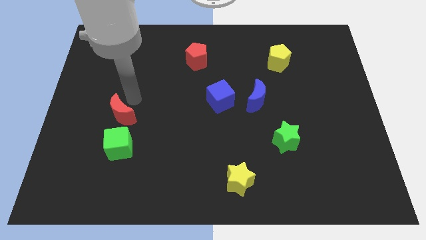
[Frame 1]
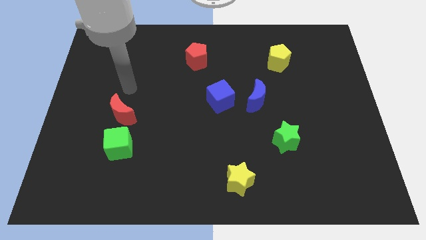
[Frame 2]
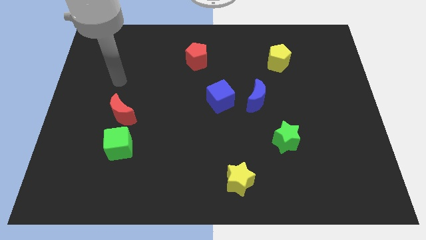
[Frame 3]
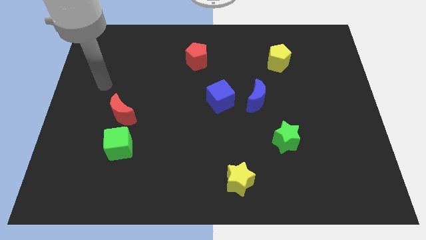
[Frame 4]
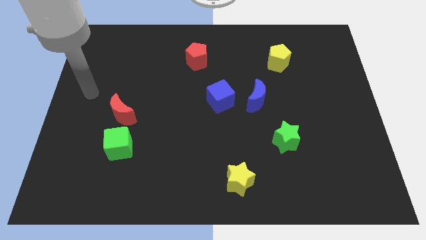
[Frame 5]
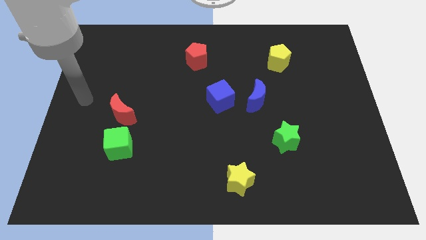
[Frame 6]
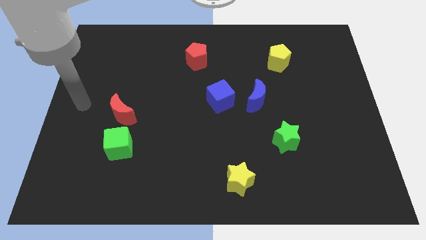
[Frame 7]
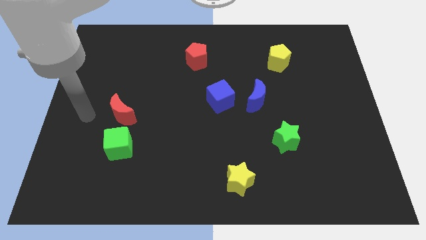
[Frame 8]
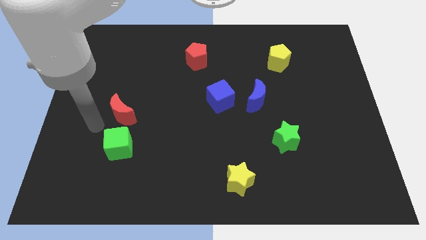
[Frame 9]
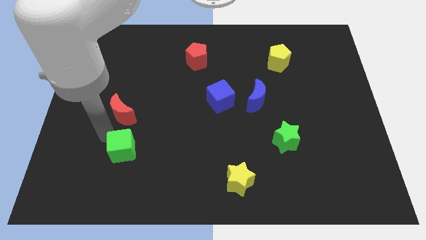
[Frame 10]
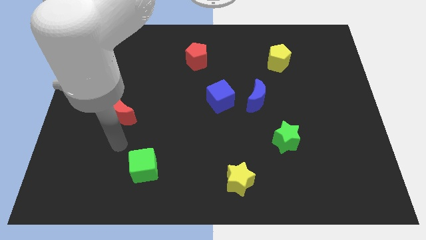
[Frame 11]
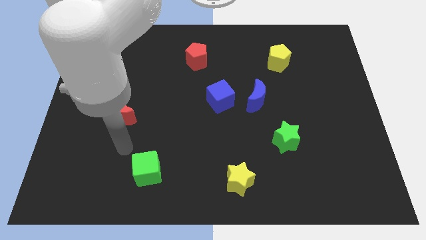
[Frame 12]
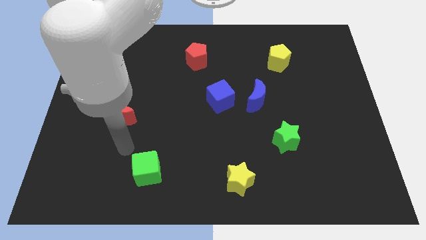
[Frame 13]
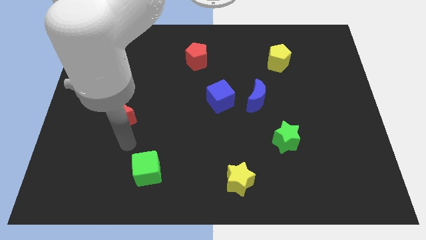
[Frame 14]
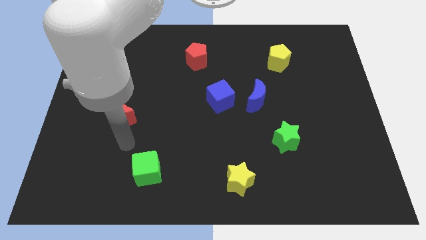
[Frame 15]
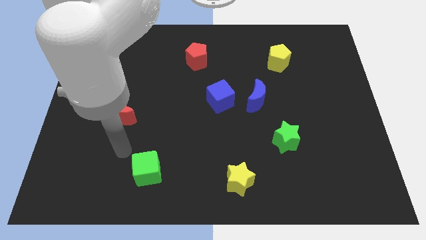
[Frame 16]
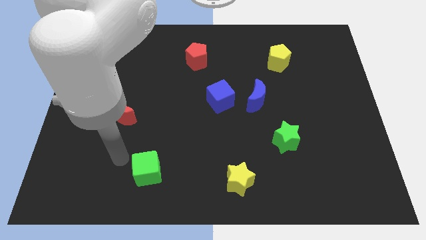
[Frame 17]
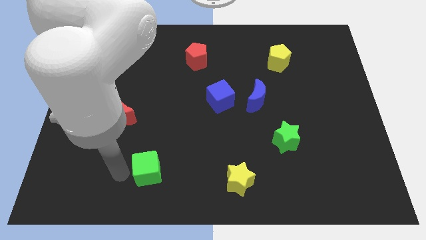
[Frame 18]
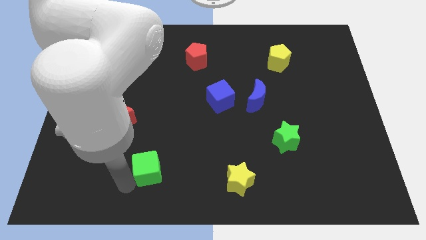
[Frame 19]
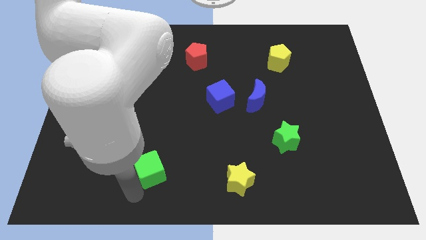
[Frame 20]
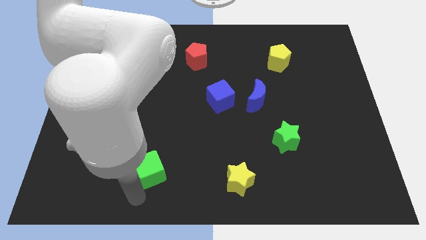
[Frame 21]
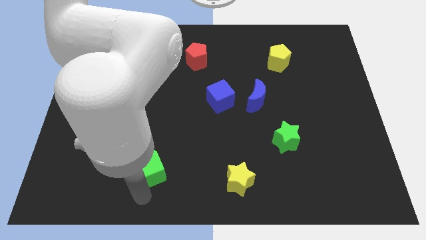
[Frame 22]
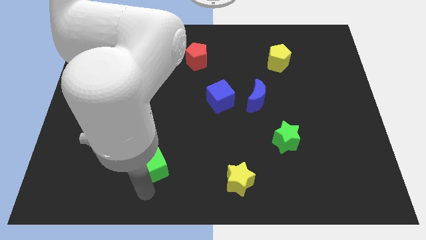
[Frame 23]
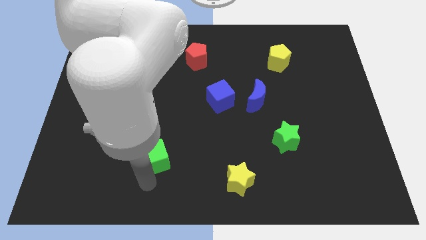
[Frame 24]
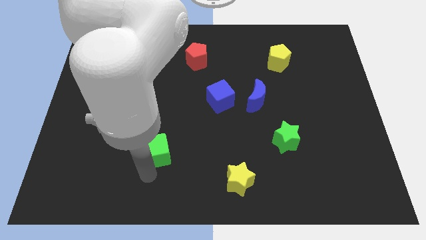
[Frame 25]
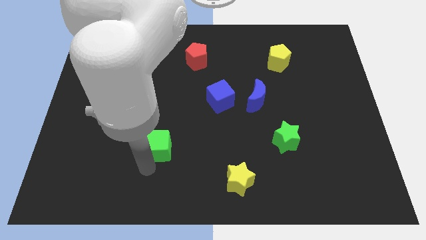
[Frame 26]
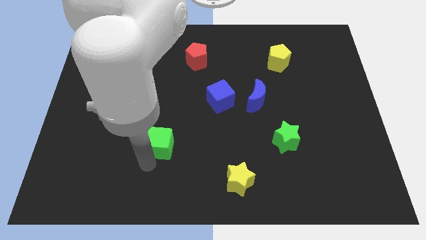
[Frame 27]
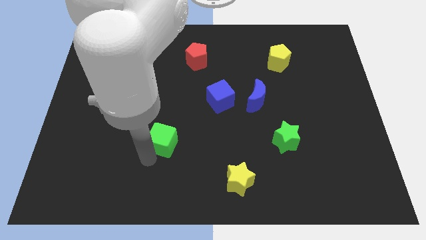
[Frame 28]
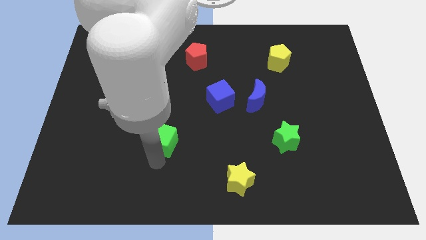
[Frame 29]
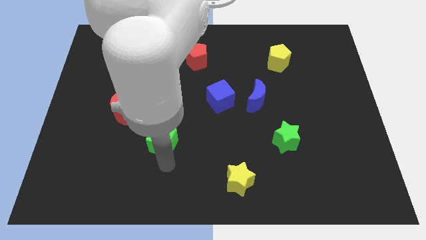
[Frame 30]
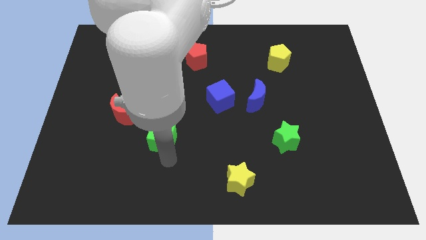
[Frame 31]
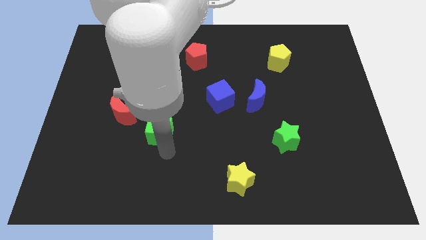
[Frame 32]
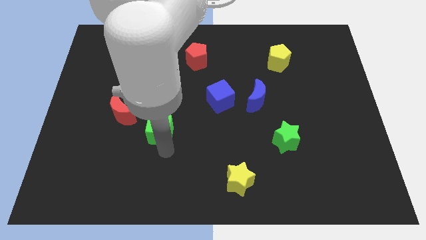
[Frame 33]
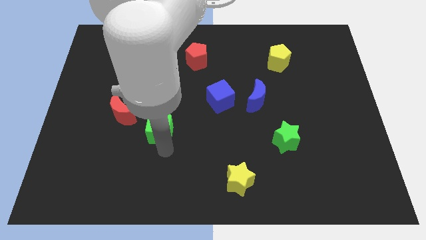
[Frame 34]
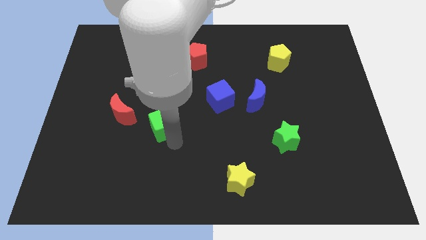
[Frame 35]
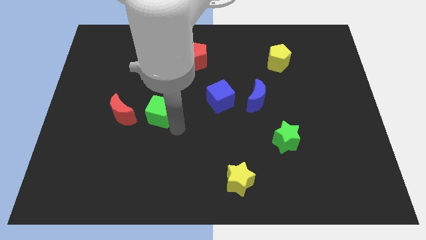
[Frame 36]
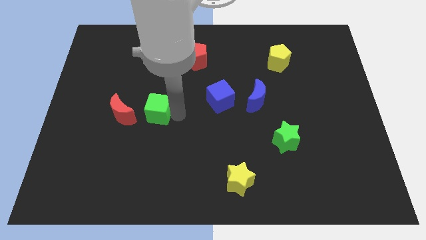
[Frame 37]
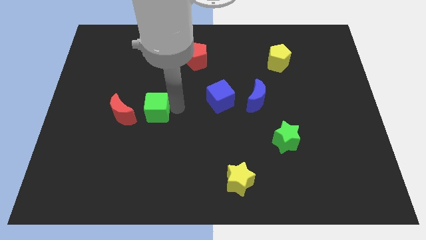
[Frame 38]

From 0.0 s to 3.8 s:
move the green cube to the right side of the red moon

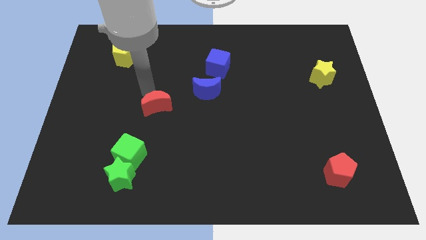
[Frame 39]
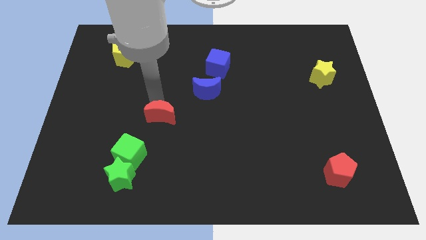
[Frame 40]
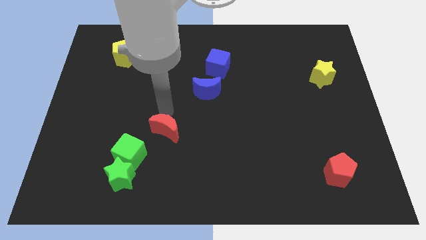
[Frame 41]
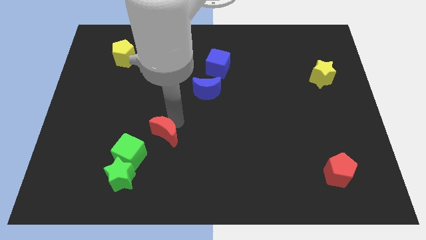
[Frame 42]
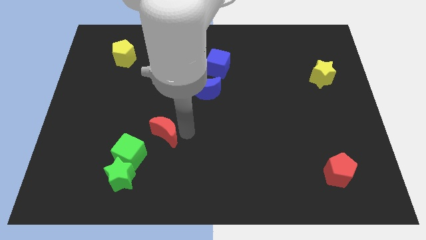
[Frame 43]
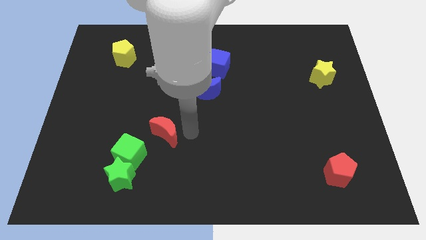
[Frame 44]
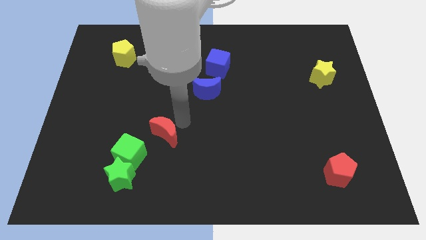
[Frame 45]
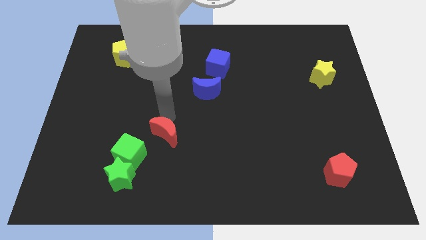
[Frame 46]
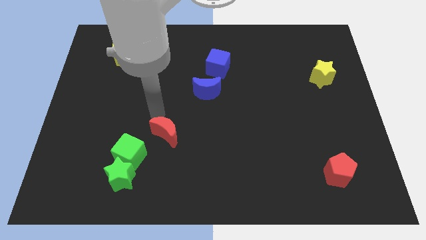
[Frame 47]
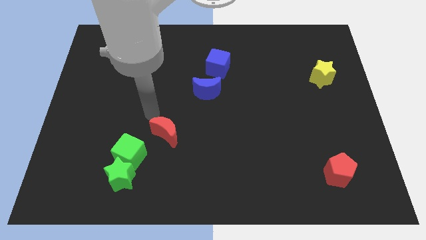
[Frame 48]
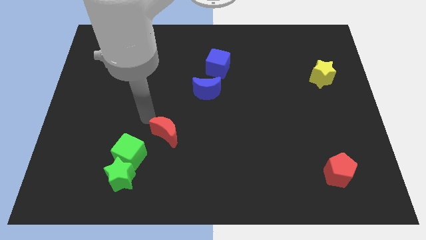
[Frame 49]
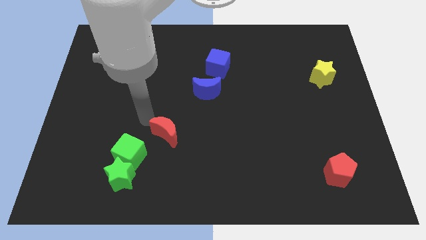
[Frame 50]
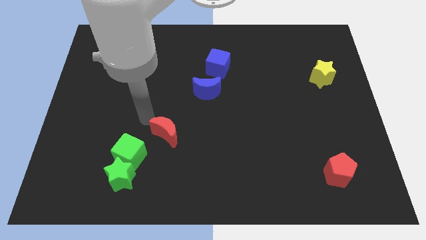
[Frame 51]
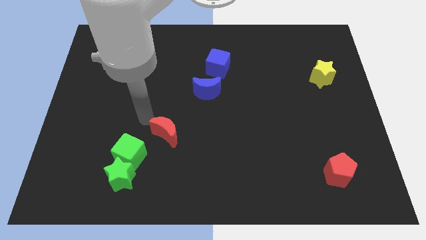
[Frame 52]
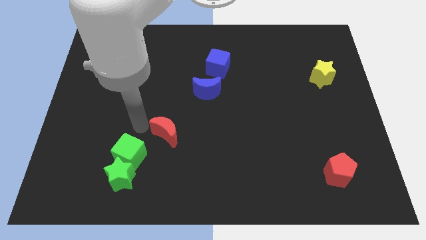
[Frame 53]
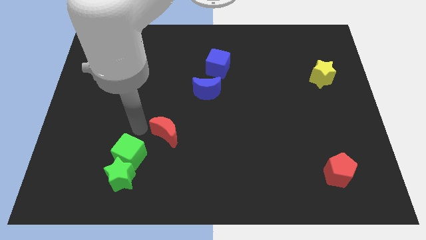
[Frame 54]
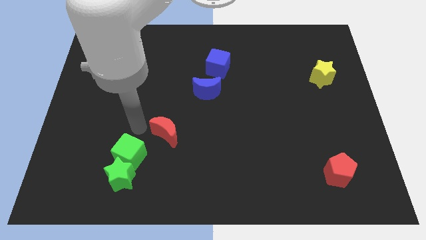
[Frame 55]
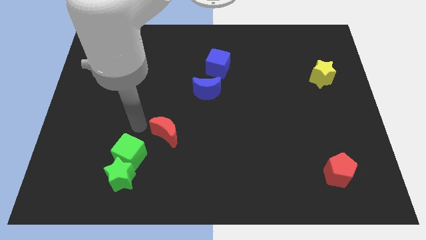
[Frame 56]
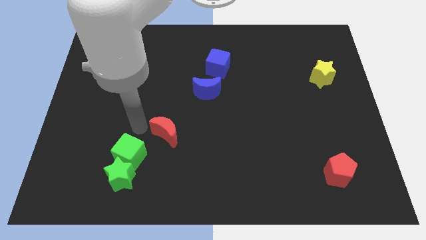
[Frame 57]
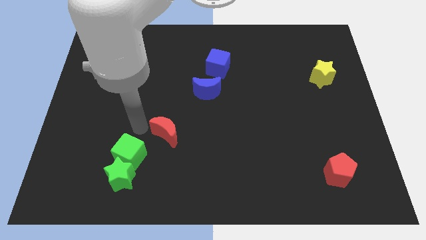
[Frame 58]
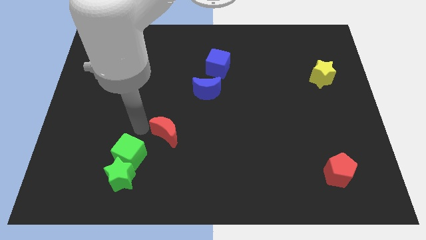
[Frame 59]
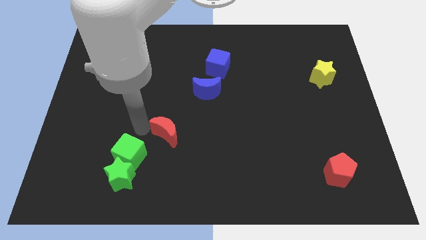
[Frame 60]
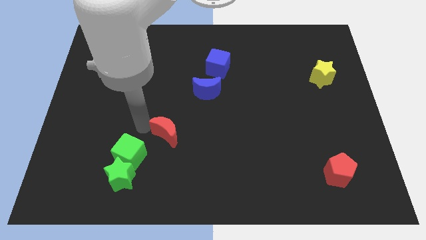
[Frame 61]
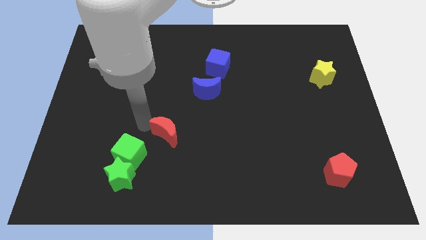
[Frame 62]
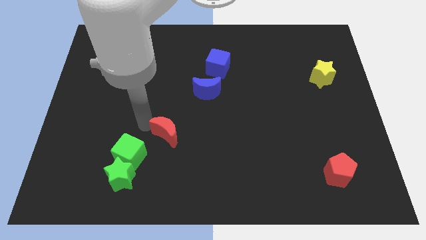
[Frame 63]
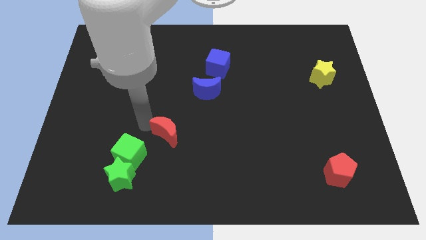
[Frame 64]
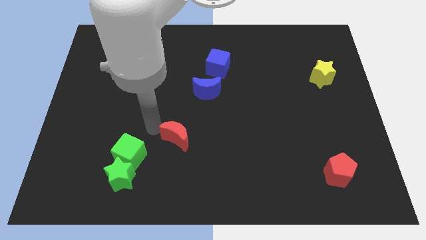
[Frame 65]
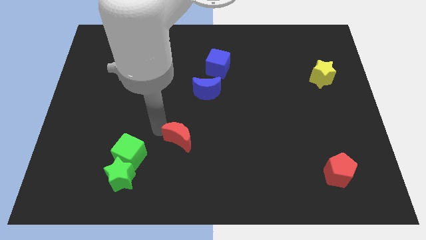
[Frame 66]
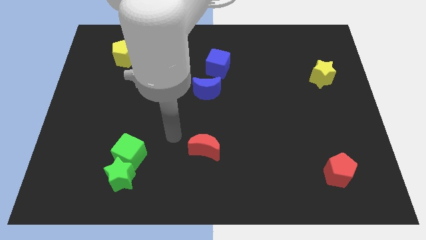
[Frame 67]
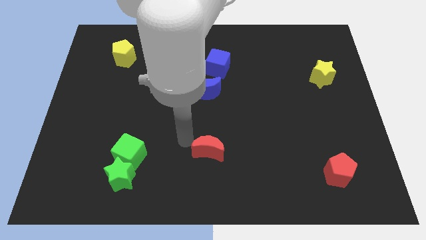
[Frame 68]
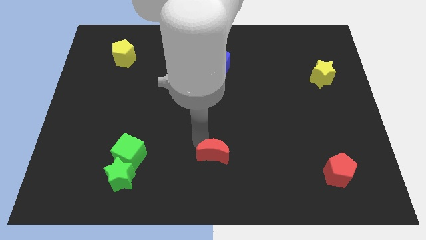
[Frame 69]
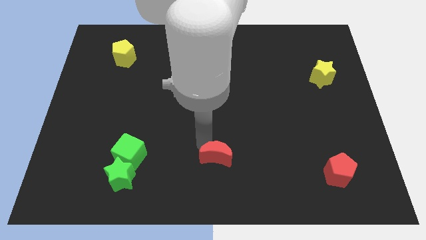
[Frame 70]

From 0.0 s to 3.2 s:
place red moon to the right of green cube

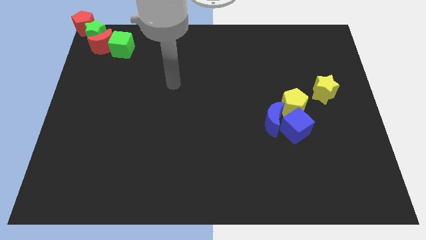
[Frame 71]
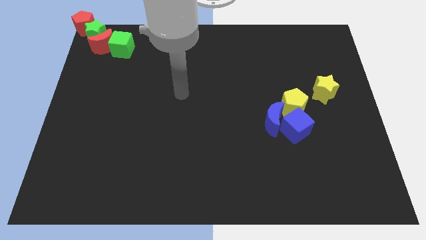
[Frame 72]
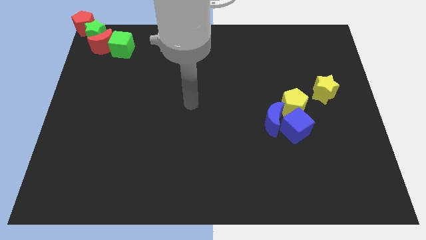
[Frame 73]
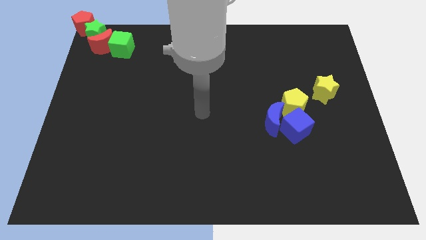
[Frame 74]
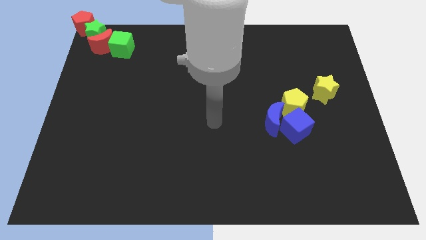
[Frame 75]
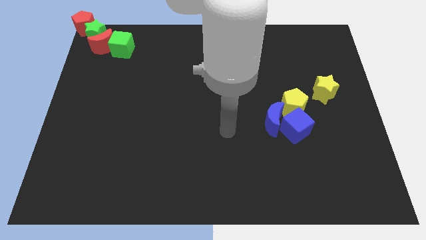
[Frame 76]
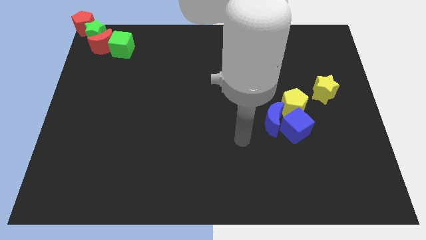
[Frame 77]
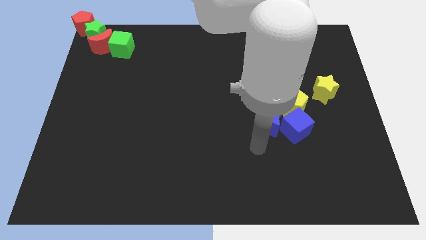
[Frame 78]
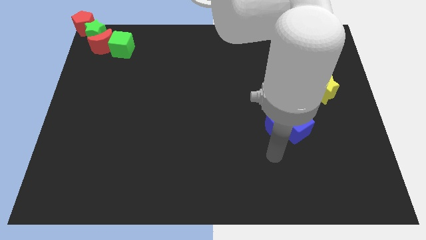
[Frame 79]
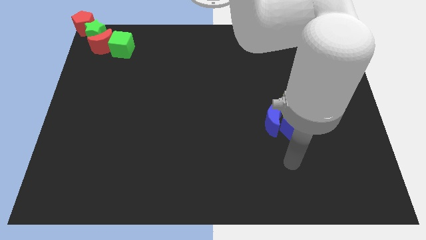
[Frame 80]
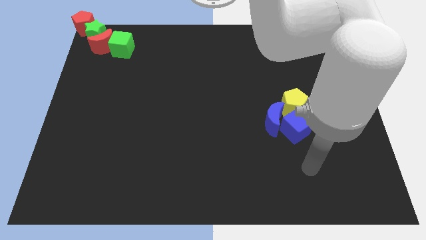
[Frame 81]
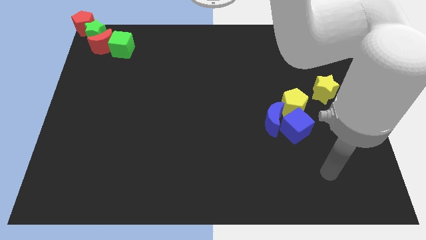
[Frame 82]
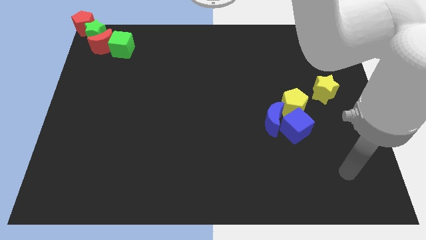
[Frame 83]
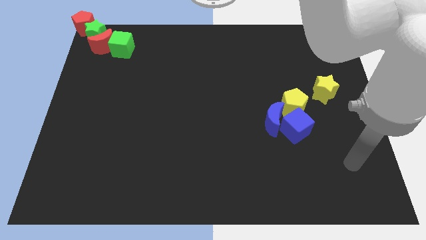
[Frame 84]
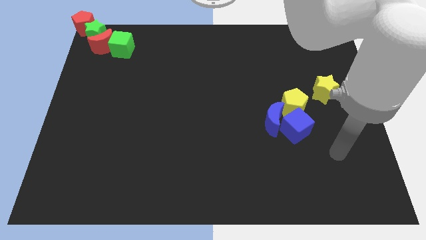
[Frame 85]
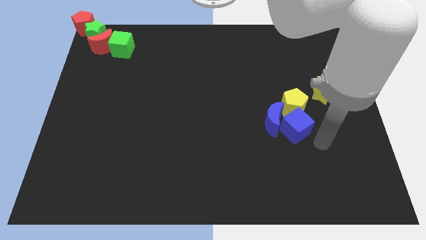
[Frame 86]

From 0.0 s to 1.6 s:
point your arm at the right of the blue cube

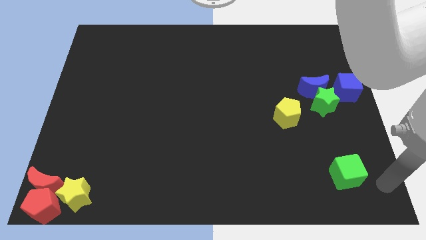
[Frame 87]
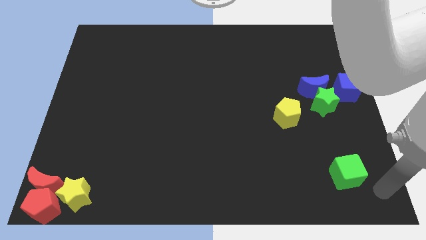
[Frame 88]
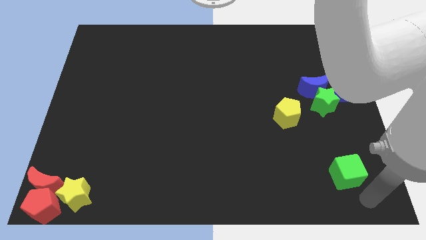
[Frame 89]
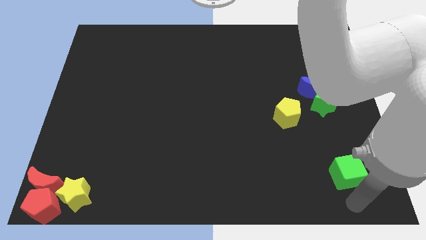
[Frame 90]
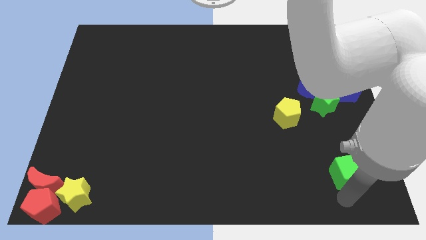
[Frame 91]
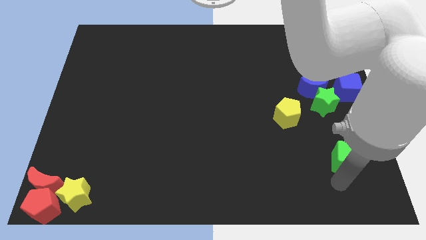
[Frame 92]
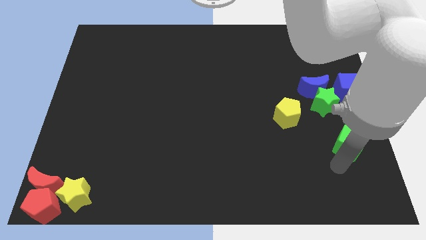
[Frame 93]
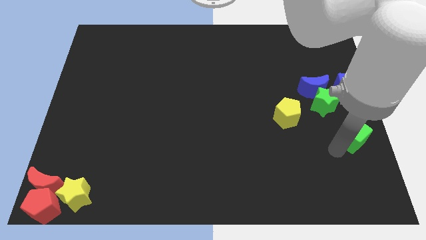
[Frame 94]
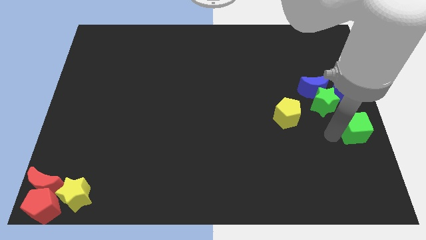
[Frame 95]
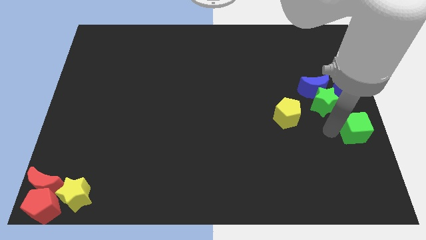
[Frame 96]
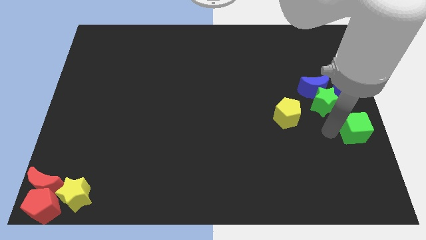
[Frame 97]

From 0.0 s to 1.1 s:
place the green cube to center right
